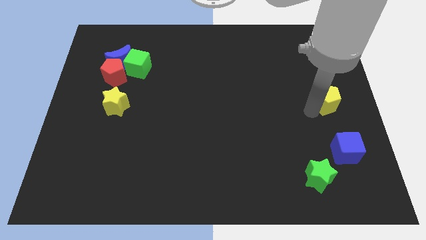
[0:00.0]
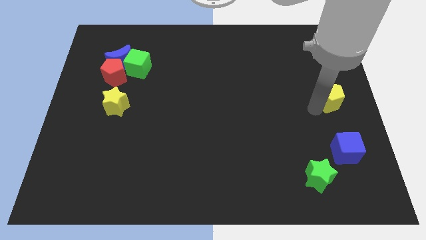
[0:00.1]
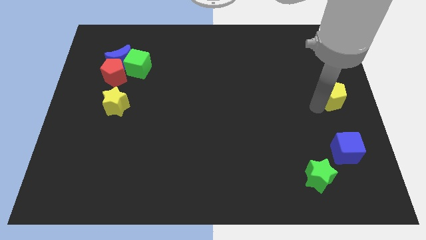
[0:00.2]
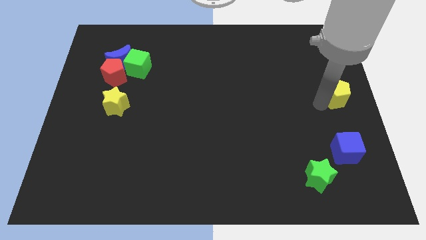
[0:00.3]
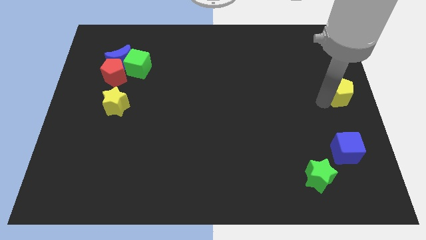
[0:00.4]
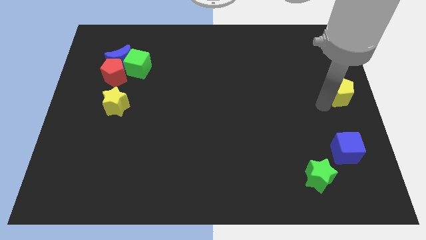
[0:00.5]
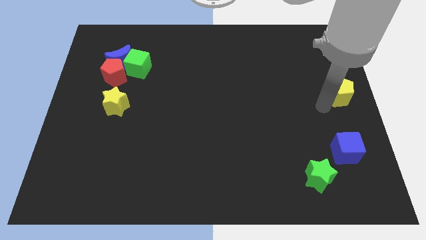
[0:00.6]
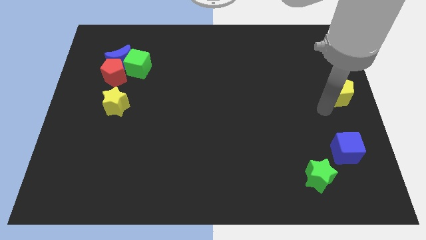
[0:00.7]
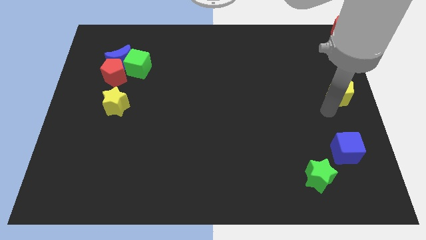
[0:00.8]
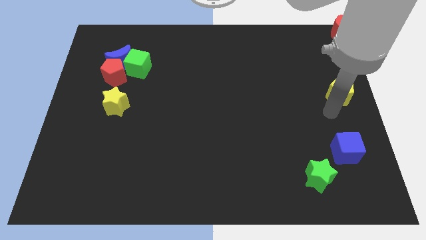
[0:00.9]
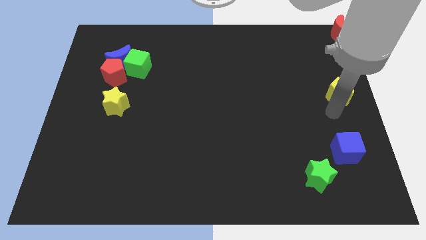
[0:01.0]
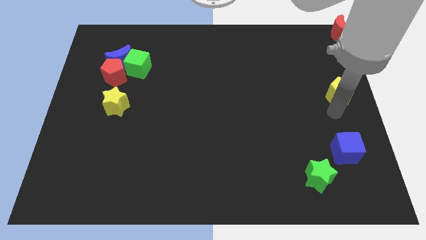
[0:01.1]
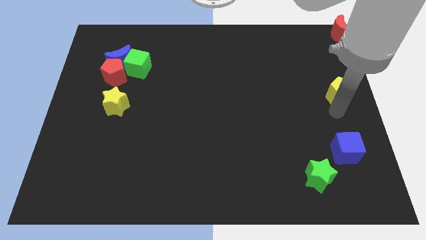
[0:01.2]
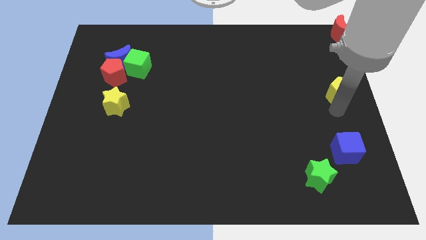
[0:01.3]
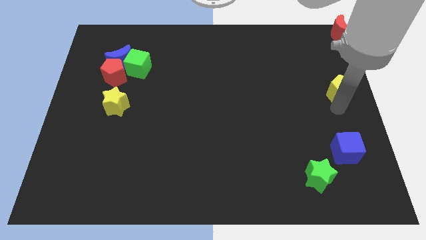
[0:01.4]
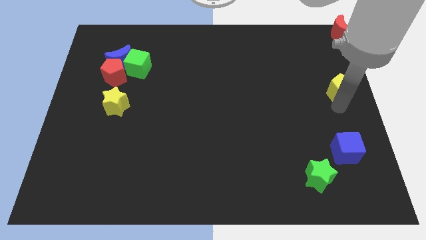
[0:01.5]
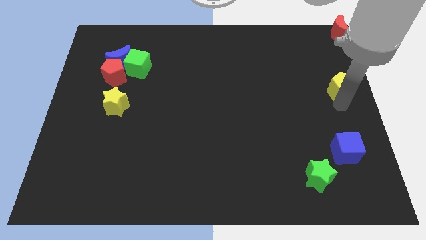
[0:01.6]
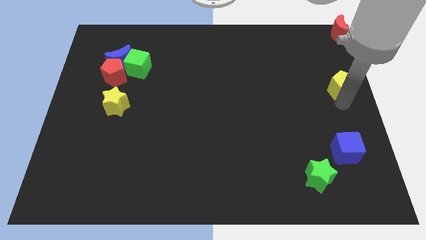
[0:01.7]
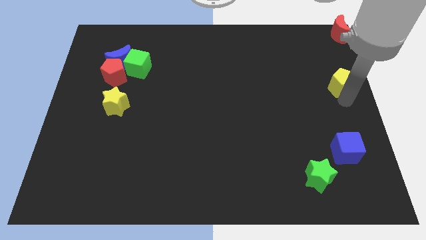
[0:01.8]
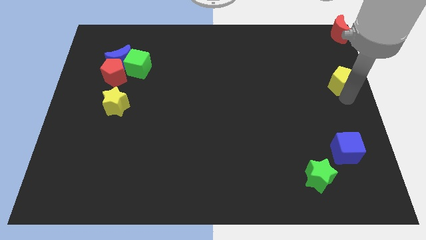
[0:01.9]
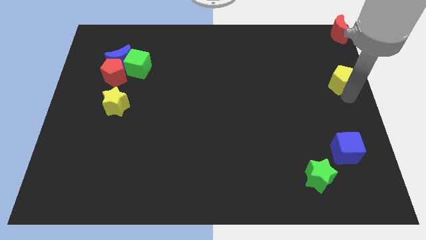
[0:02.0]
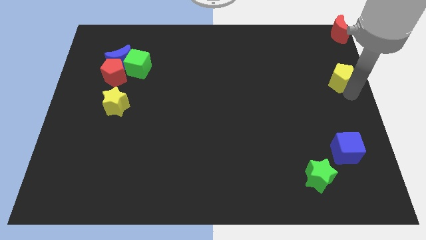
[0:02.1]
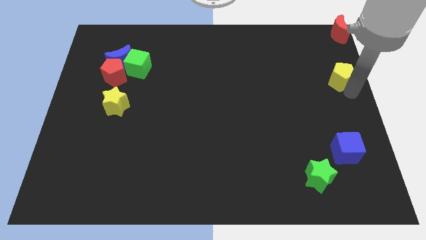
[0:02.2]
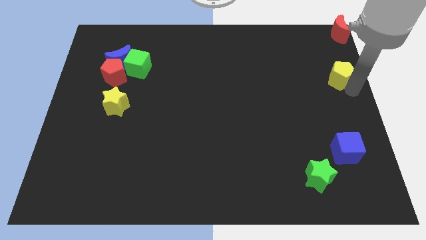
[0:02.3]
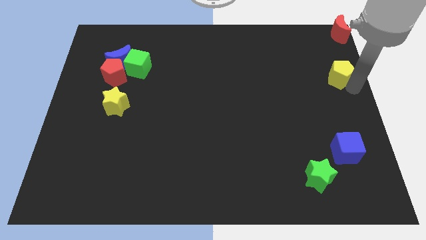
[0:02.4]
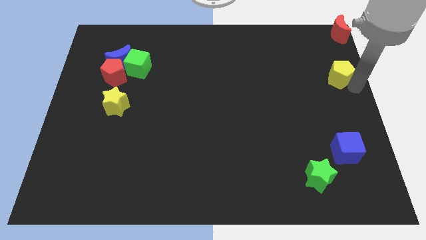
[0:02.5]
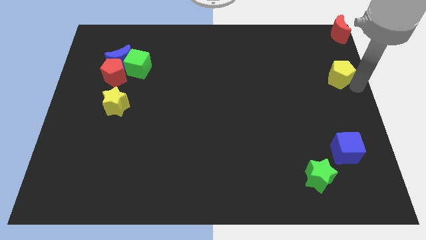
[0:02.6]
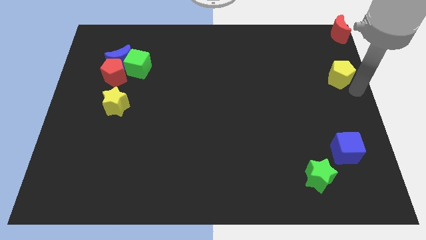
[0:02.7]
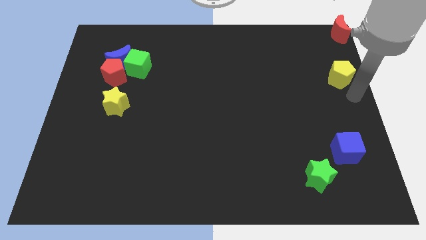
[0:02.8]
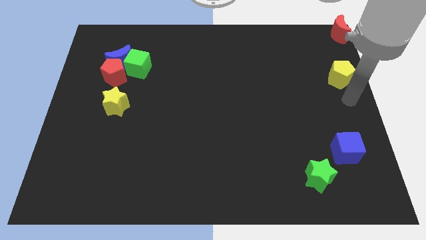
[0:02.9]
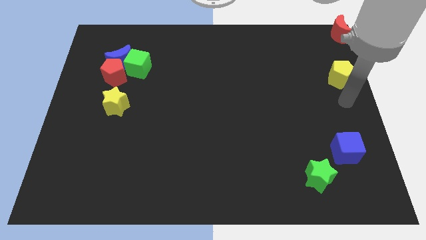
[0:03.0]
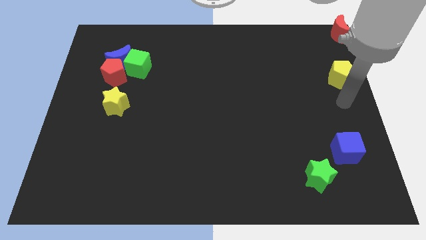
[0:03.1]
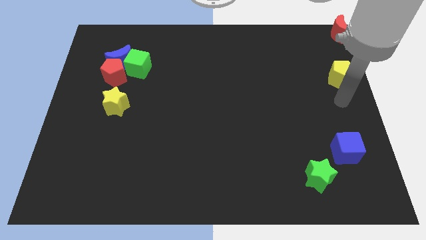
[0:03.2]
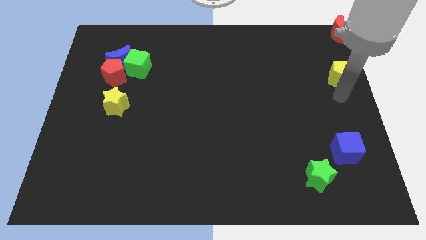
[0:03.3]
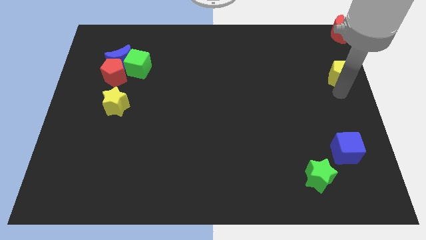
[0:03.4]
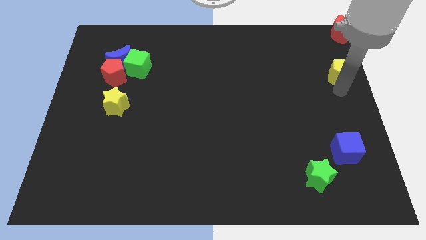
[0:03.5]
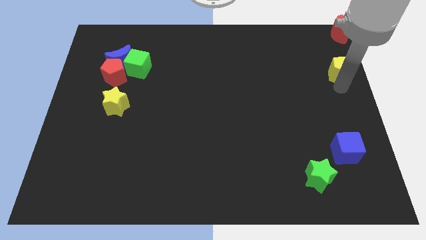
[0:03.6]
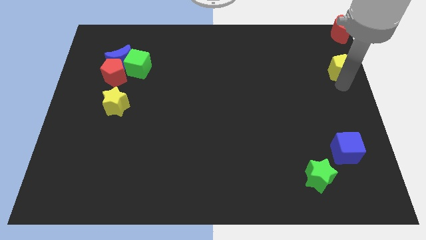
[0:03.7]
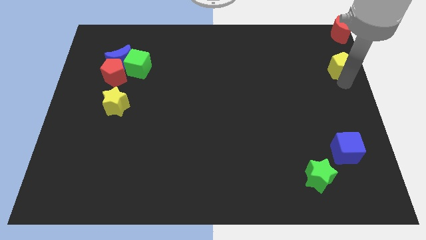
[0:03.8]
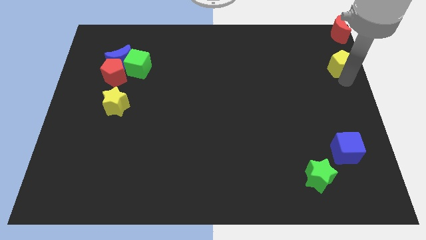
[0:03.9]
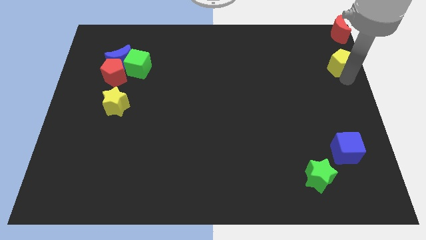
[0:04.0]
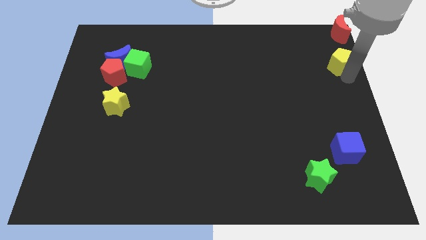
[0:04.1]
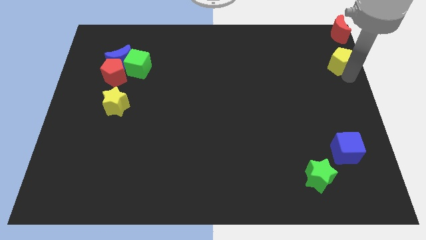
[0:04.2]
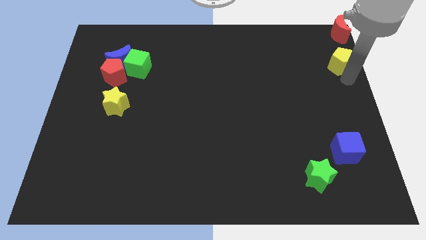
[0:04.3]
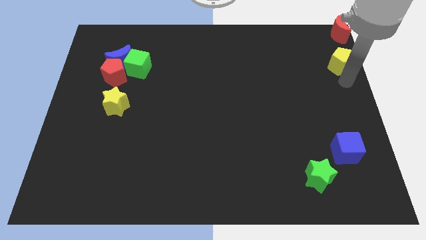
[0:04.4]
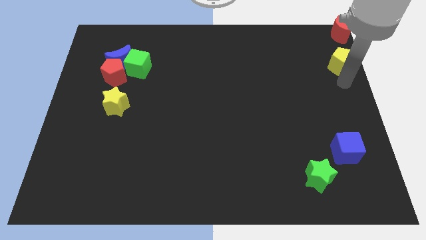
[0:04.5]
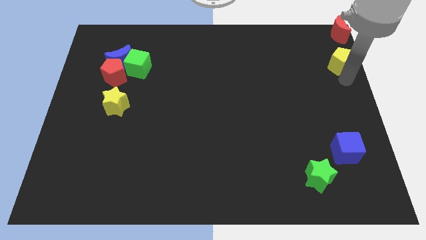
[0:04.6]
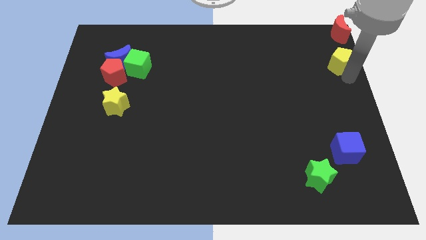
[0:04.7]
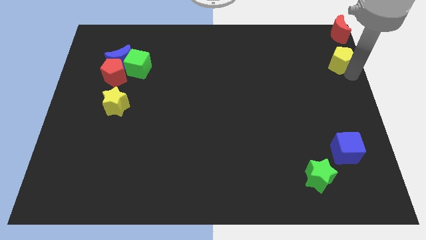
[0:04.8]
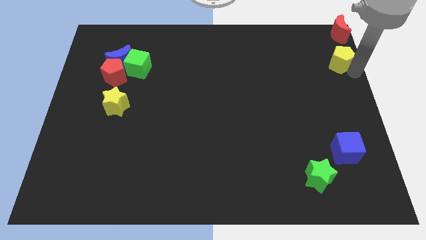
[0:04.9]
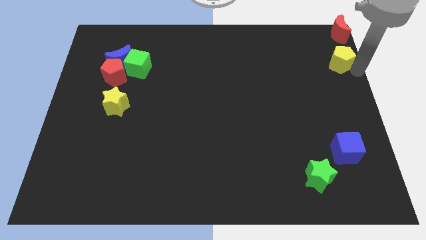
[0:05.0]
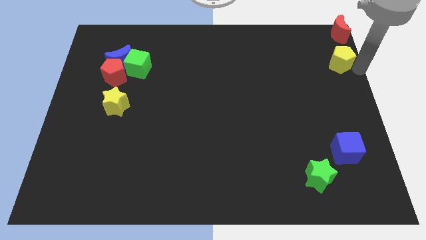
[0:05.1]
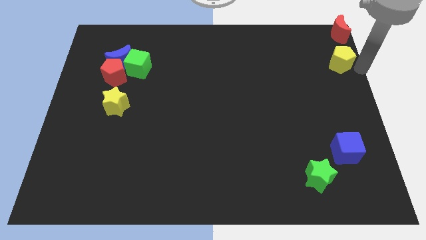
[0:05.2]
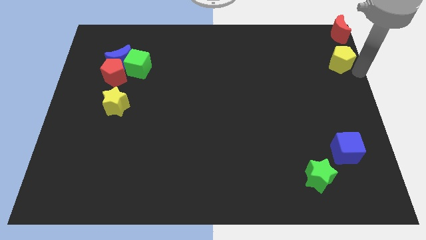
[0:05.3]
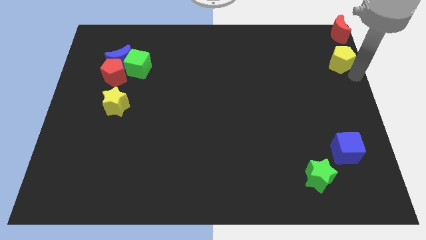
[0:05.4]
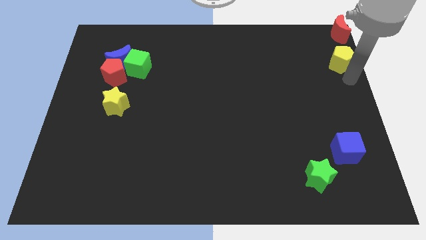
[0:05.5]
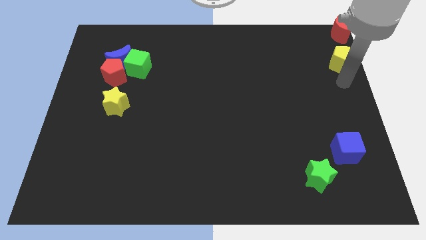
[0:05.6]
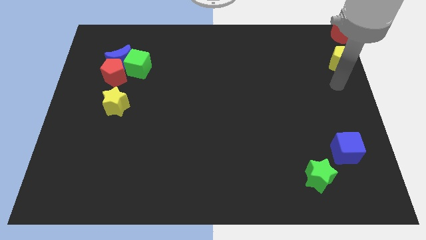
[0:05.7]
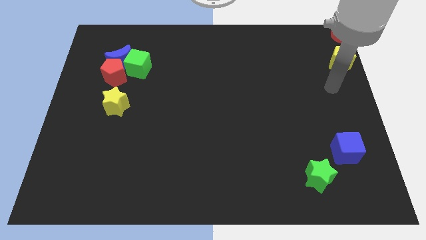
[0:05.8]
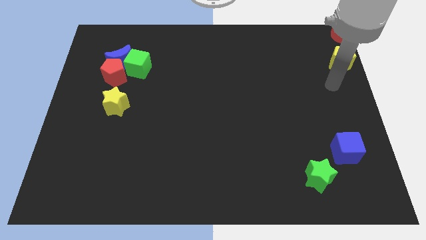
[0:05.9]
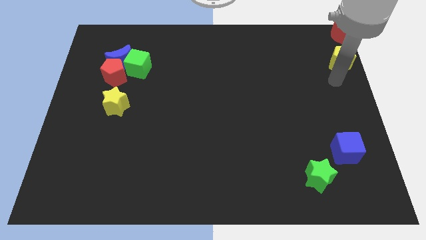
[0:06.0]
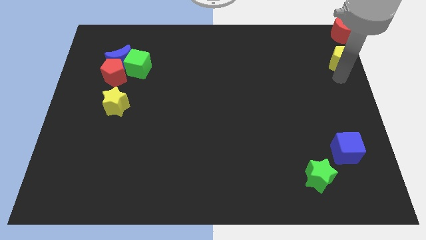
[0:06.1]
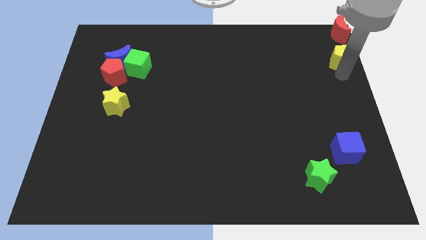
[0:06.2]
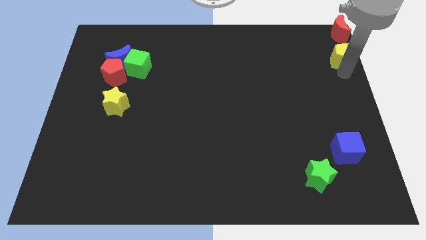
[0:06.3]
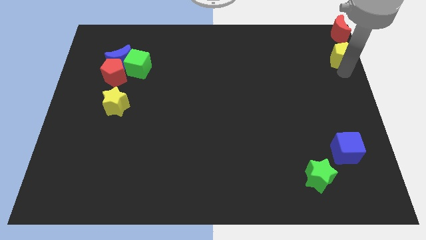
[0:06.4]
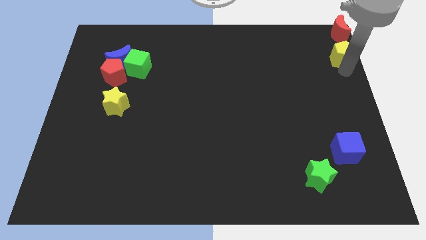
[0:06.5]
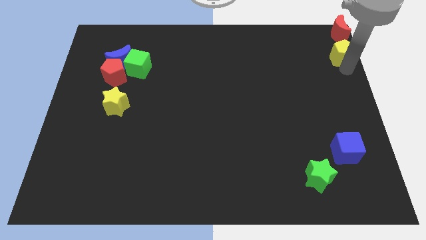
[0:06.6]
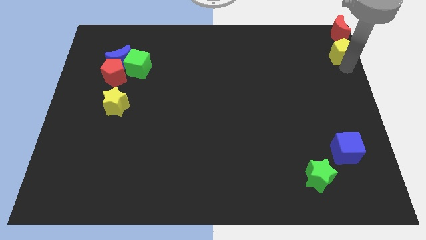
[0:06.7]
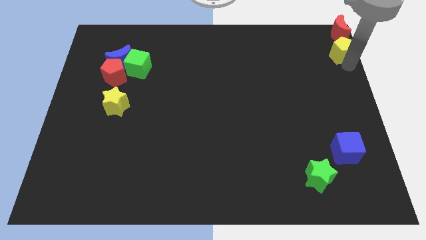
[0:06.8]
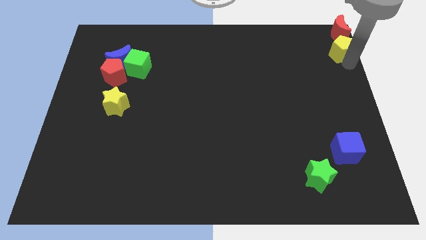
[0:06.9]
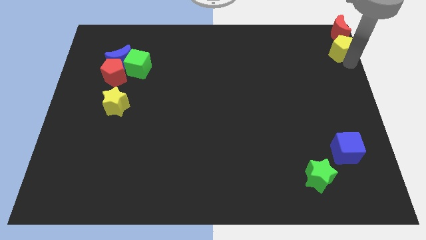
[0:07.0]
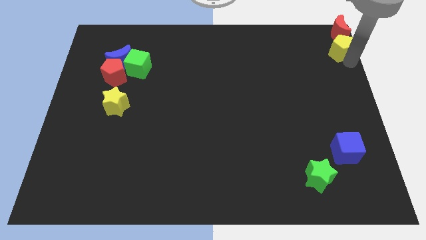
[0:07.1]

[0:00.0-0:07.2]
put the yellow pentagon down to the red moon

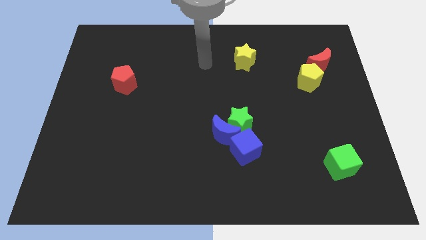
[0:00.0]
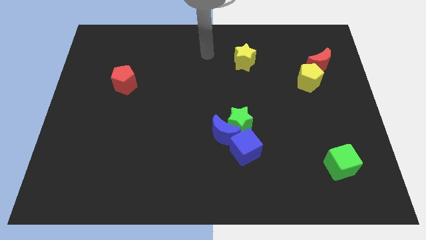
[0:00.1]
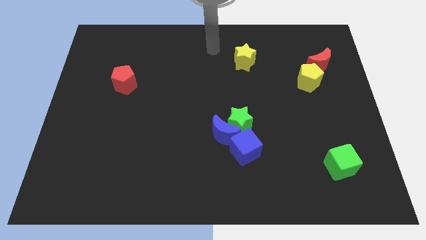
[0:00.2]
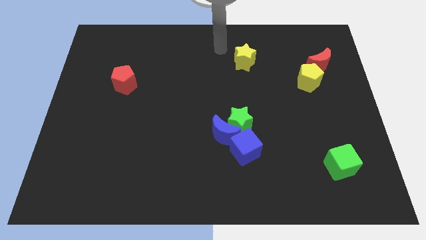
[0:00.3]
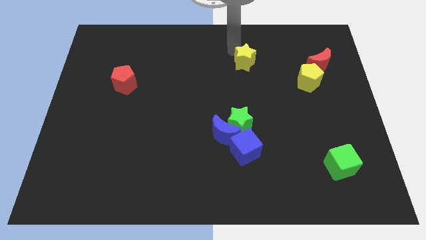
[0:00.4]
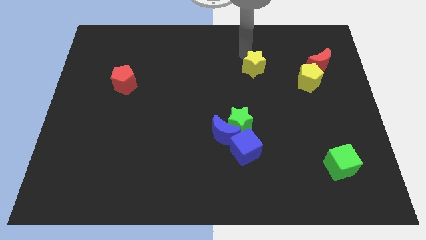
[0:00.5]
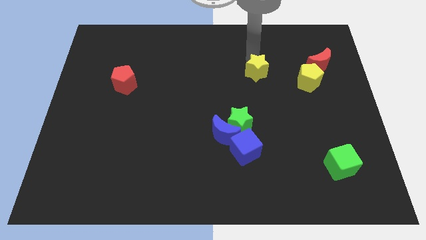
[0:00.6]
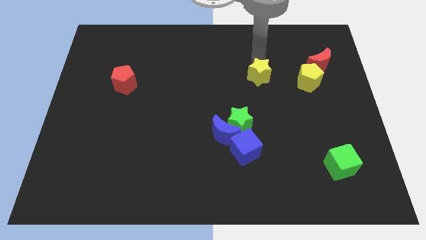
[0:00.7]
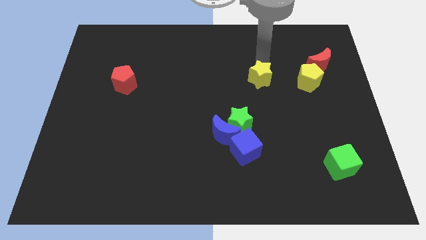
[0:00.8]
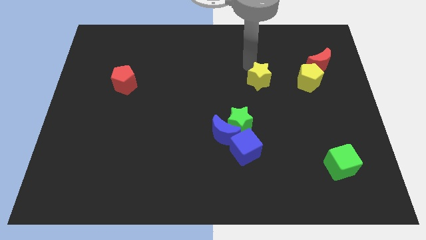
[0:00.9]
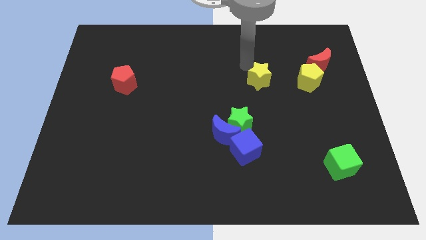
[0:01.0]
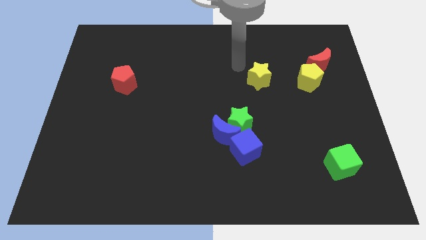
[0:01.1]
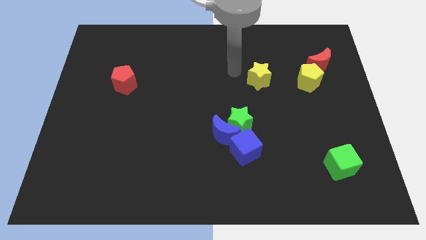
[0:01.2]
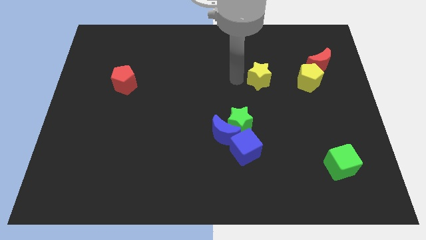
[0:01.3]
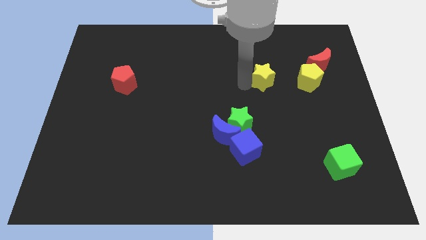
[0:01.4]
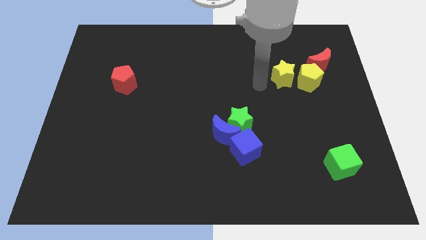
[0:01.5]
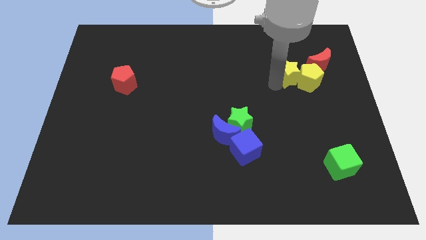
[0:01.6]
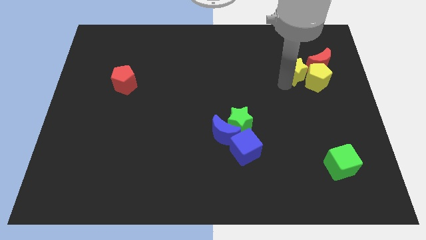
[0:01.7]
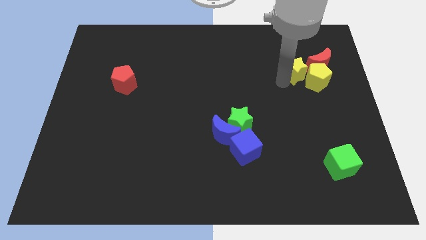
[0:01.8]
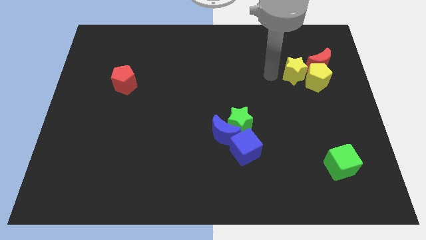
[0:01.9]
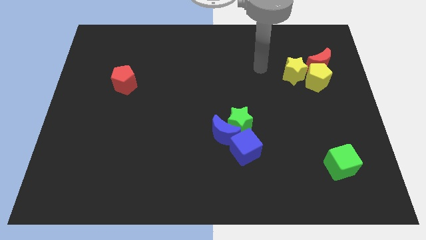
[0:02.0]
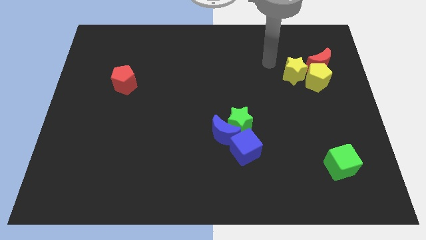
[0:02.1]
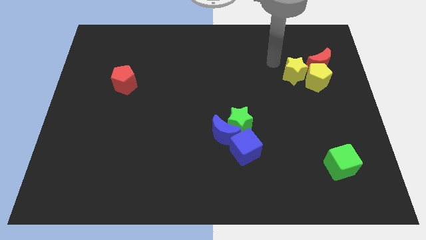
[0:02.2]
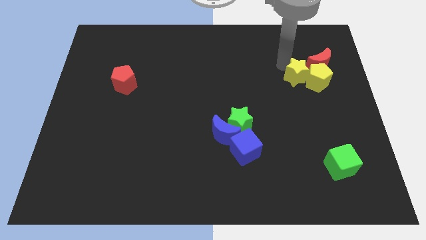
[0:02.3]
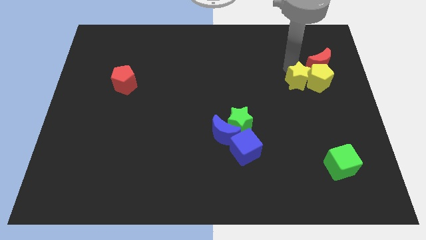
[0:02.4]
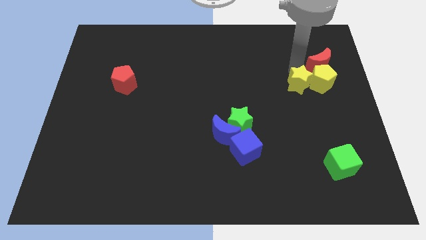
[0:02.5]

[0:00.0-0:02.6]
push the yellow star to the left side of the yellow pentagon
